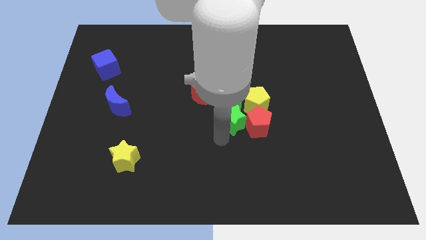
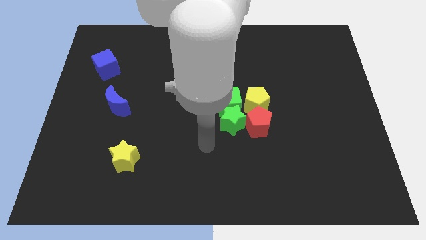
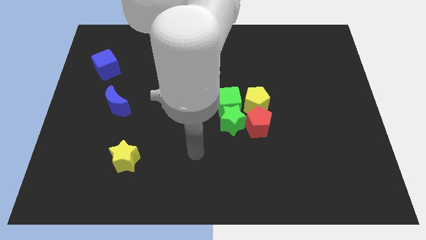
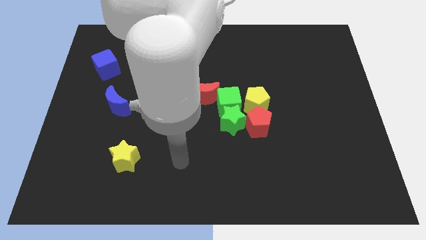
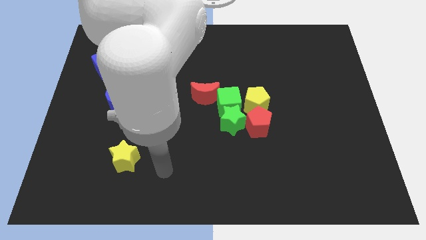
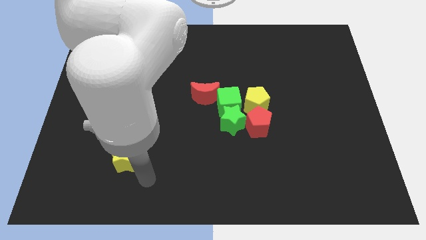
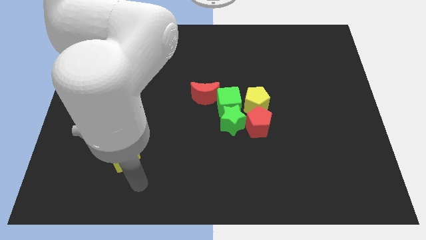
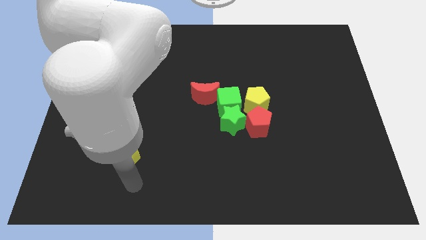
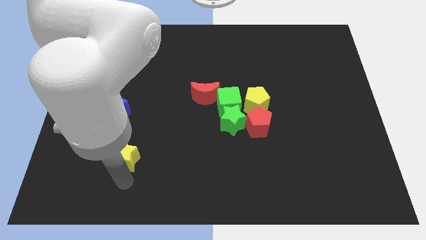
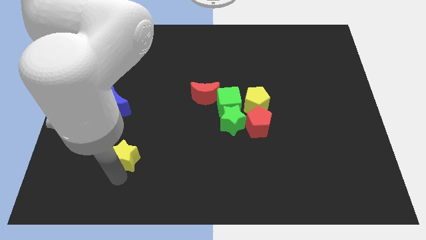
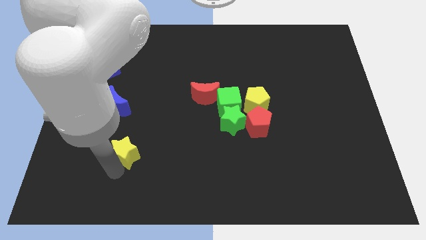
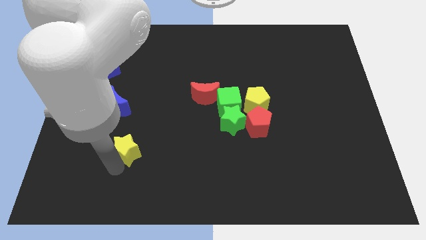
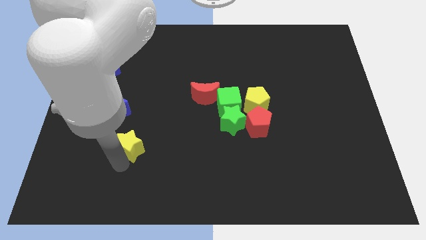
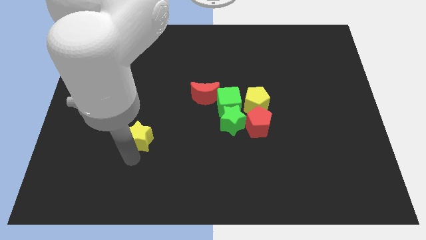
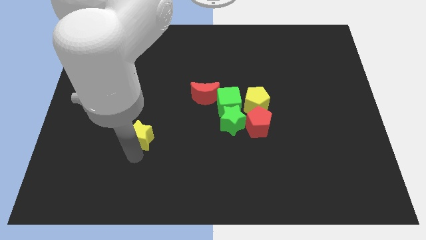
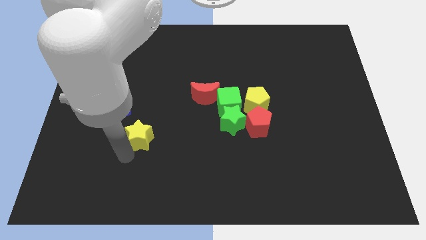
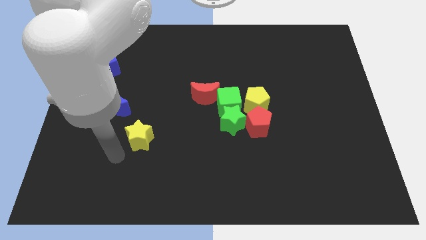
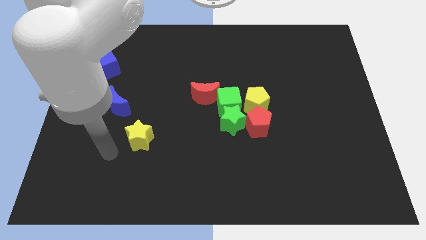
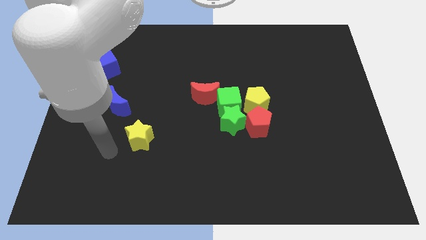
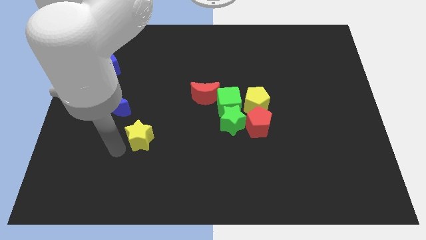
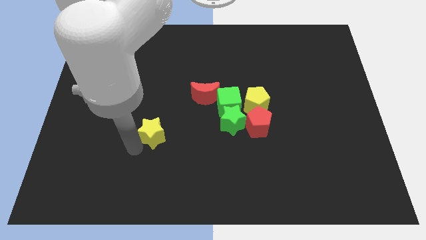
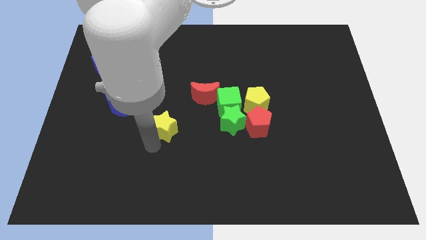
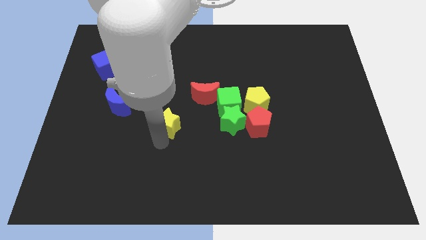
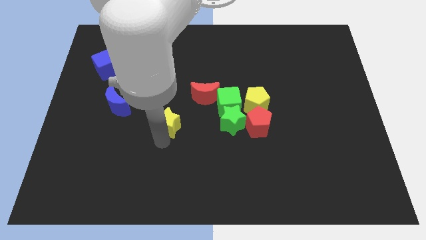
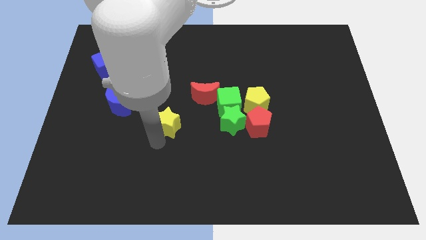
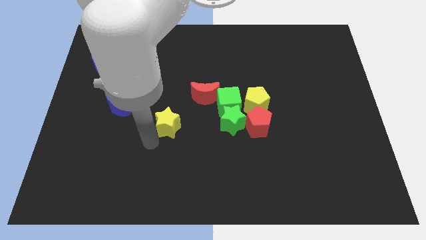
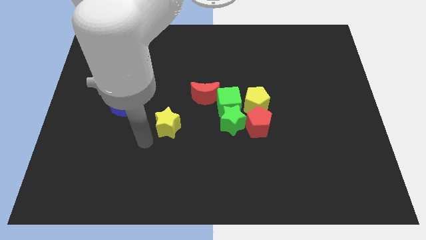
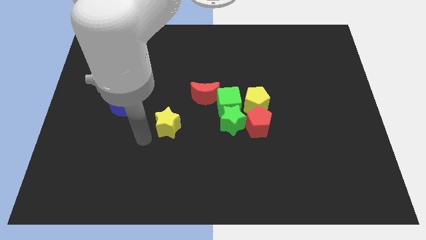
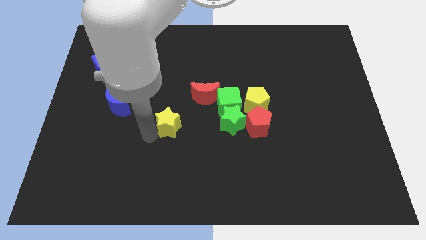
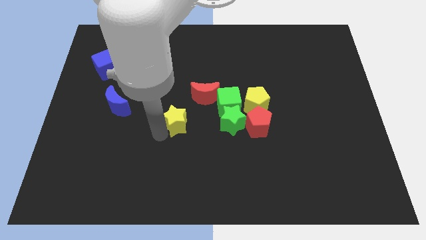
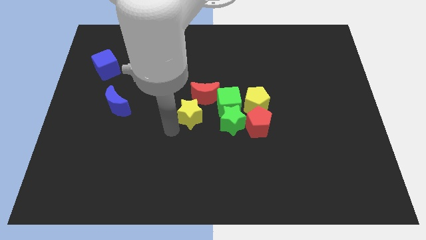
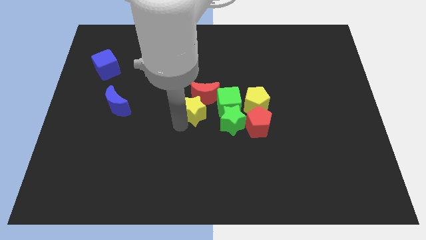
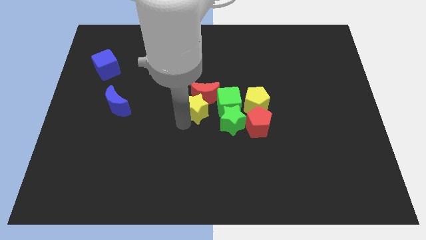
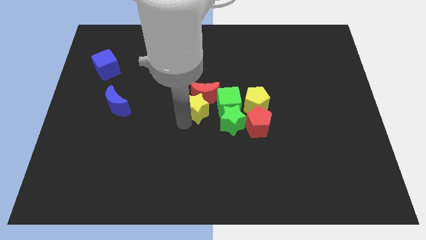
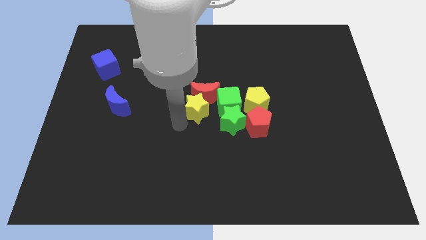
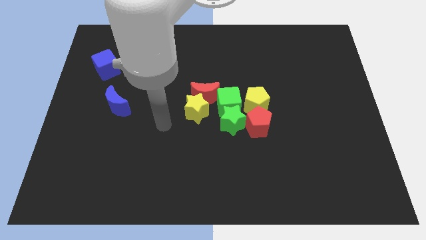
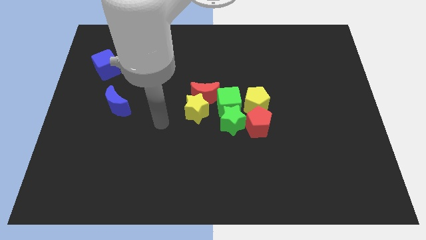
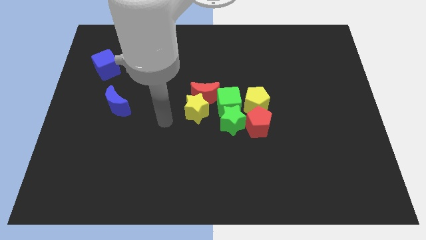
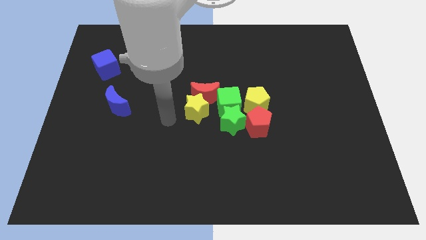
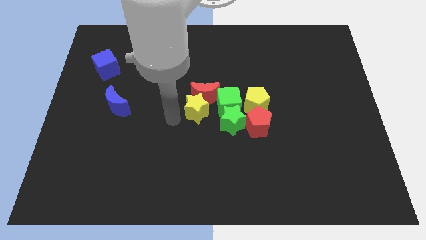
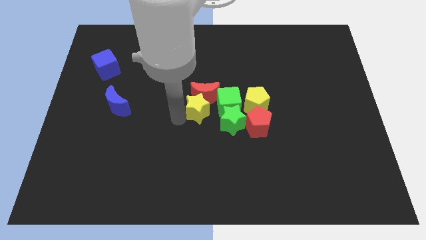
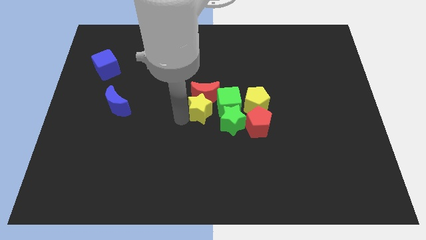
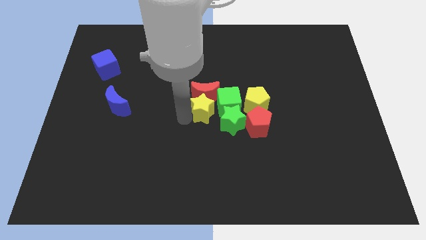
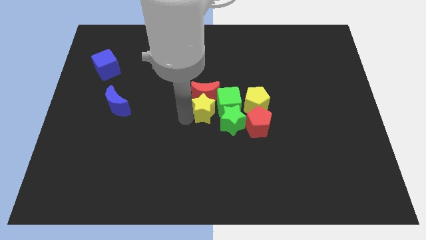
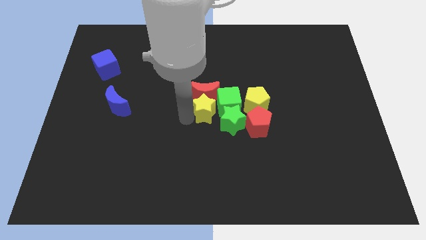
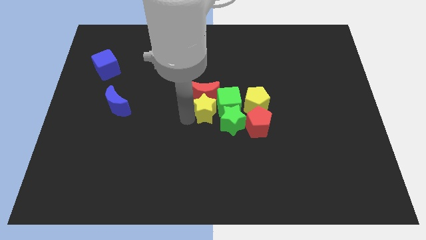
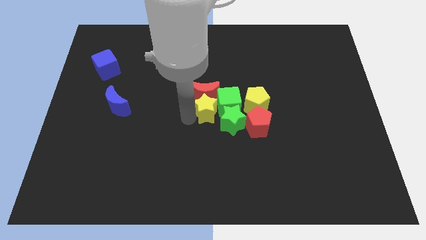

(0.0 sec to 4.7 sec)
place the yellow star below the red crescent

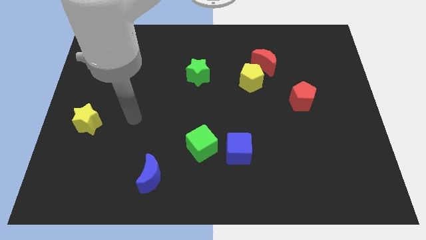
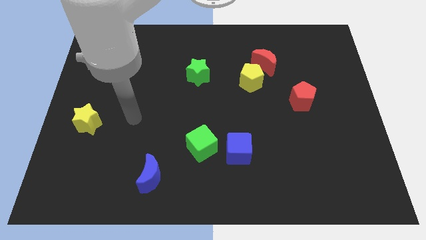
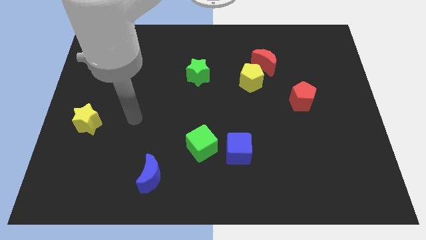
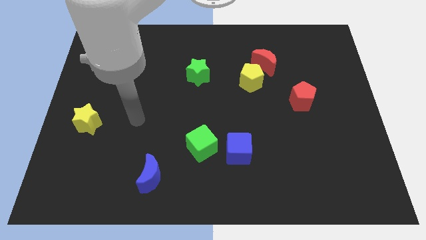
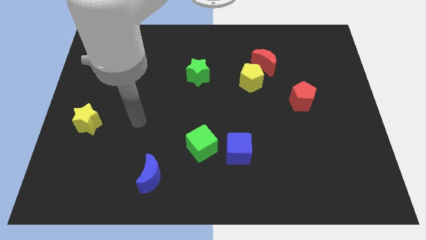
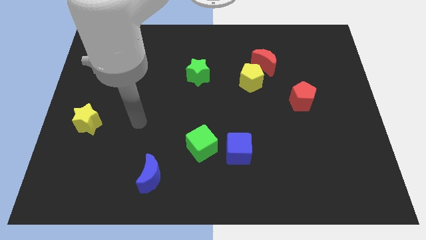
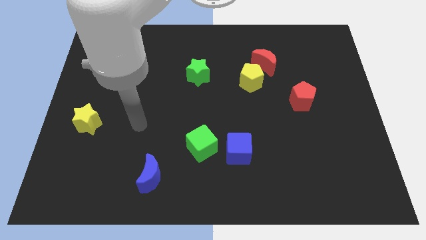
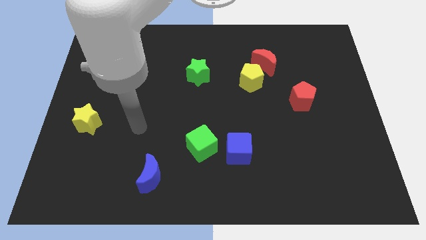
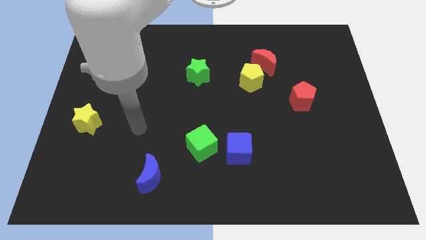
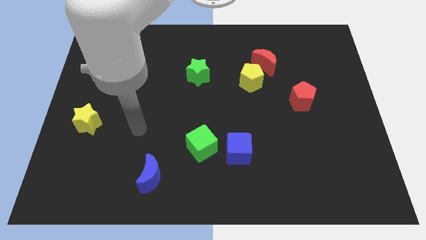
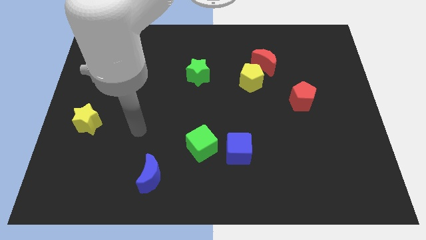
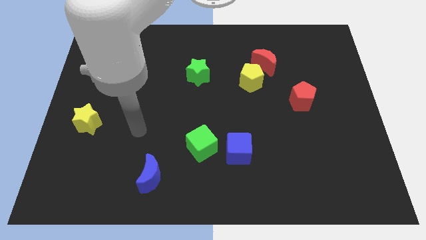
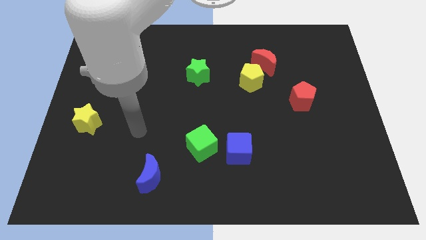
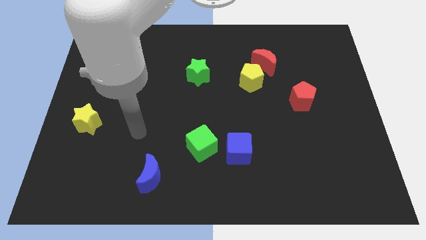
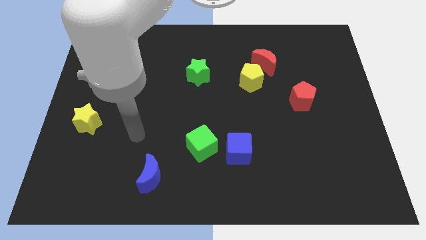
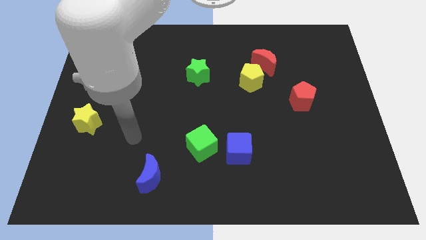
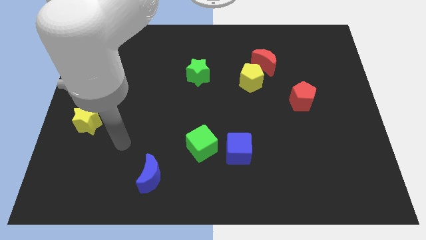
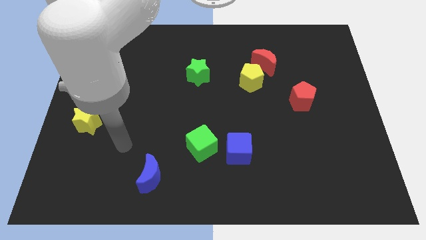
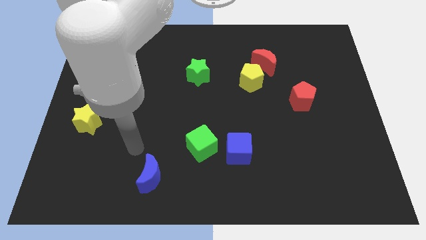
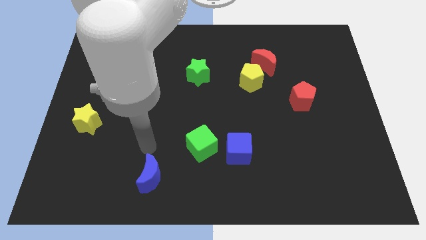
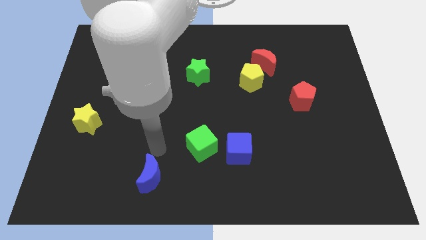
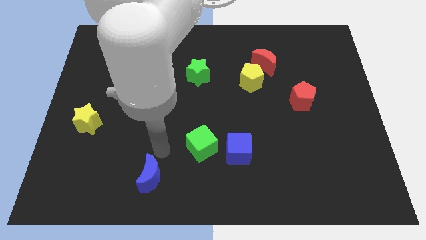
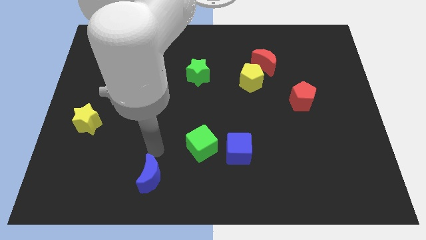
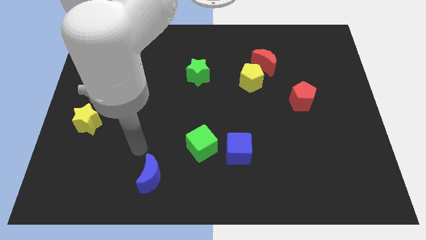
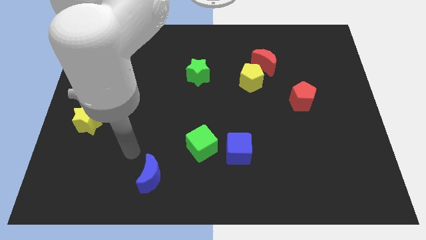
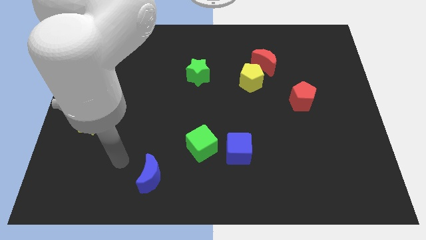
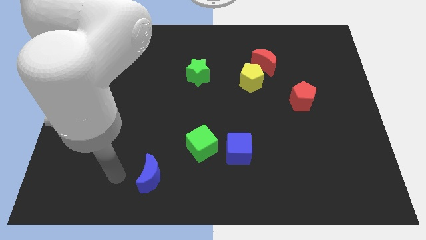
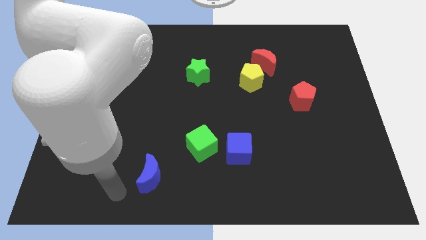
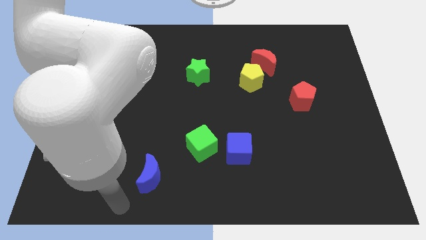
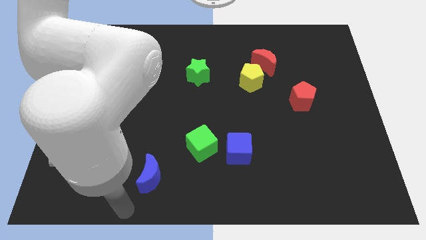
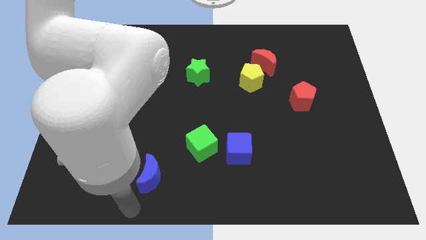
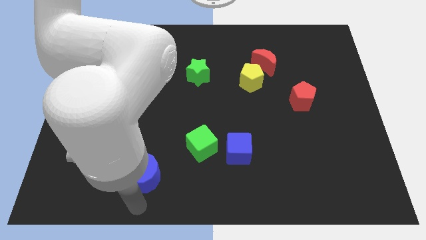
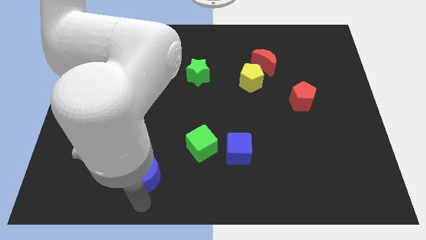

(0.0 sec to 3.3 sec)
put your hand vertically below the blue moon

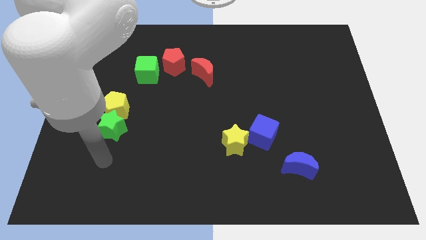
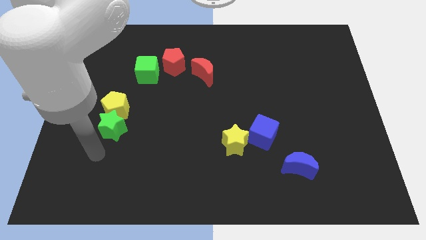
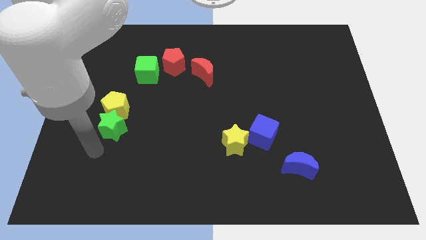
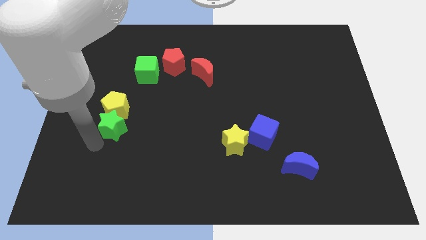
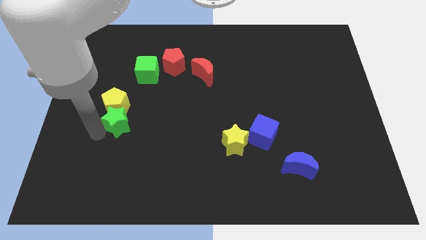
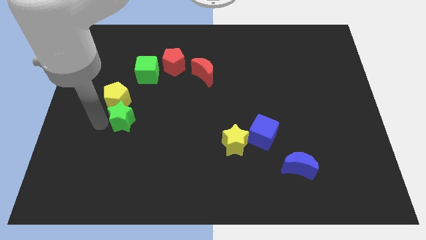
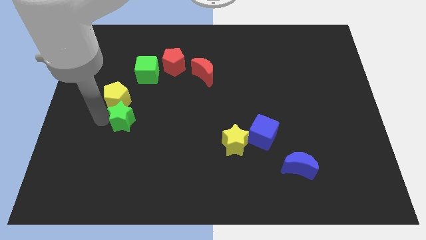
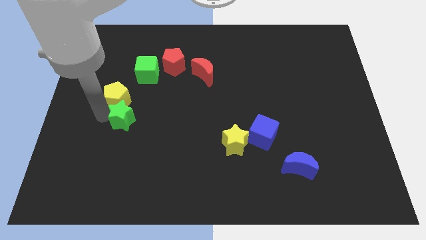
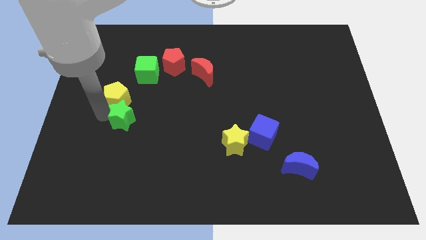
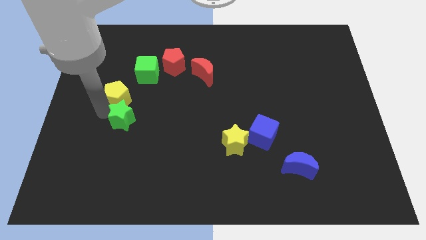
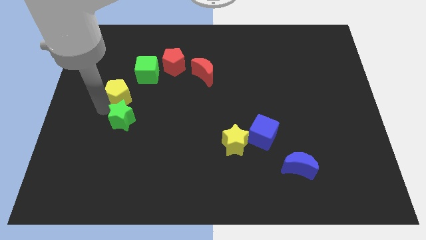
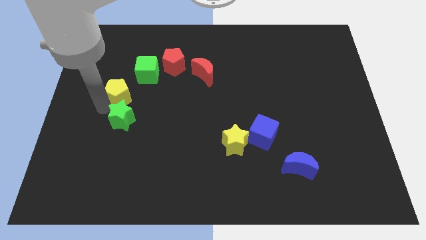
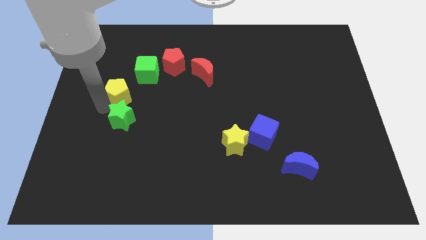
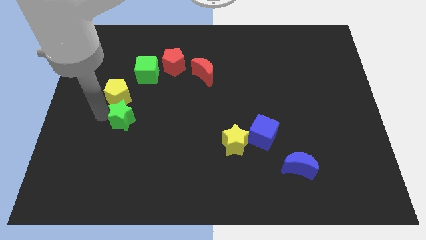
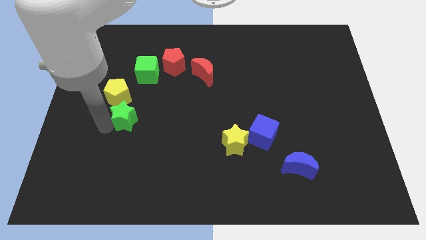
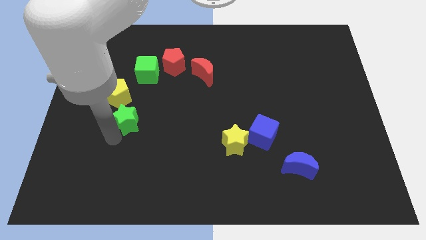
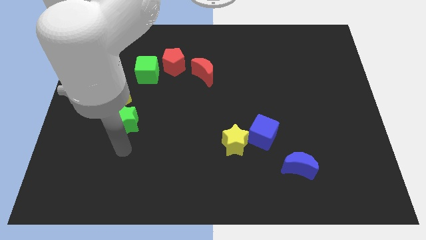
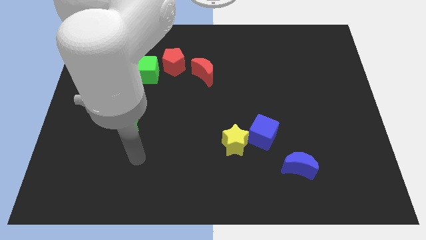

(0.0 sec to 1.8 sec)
separate green star and the yellow pentagon
